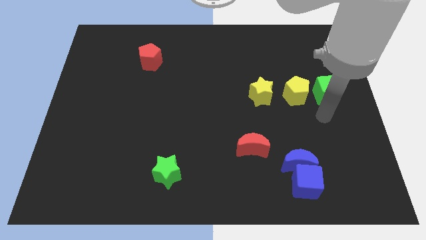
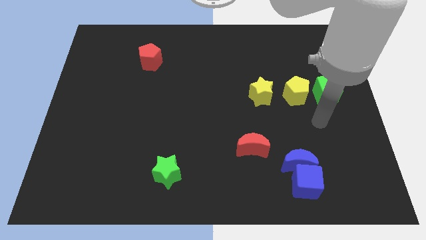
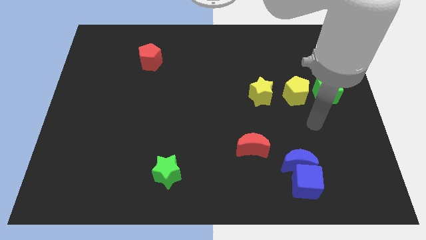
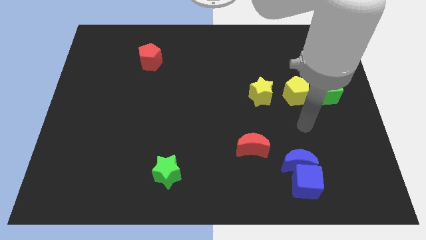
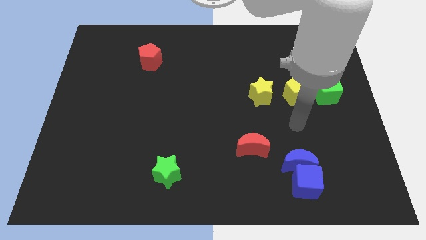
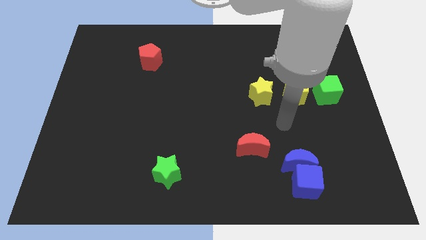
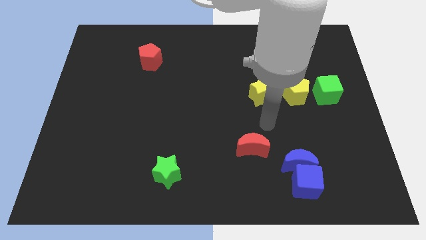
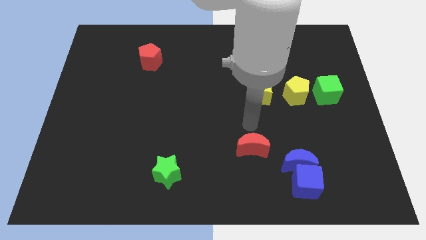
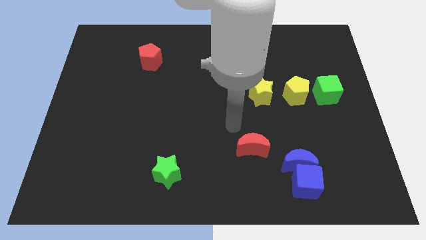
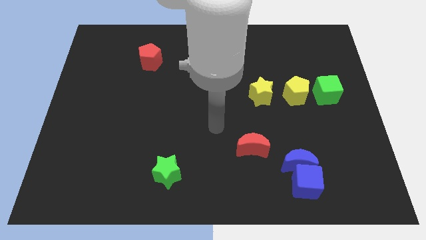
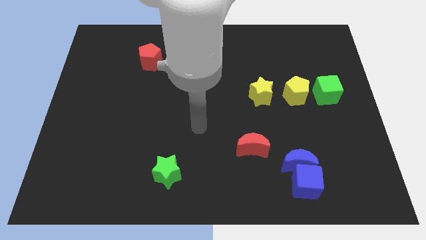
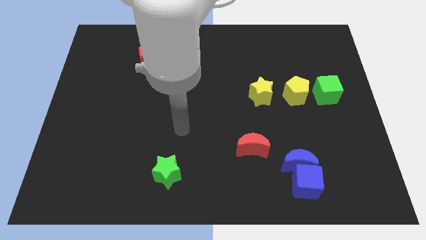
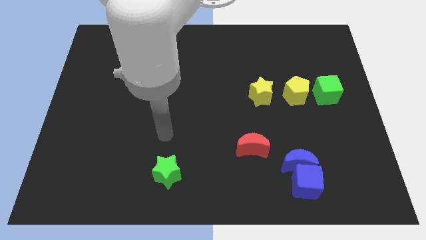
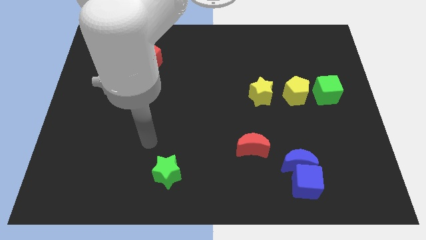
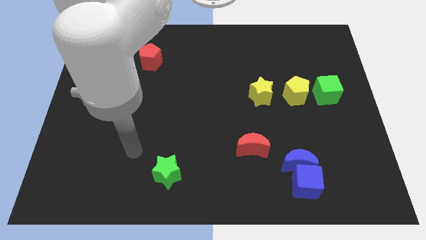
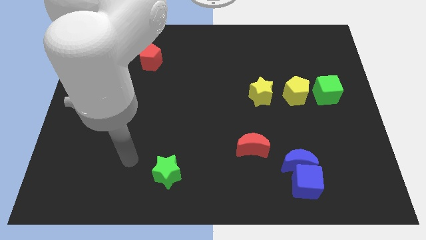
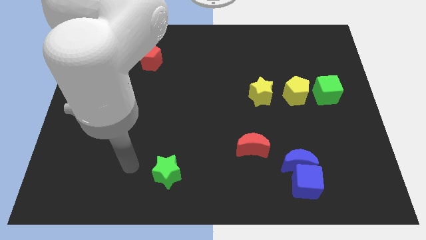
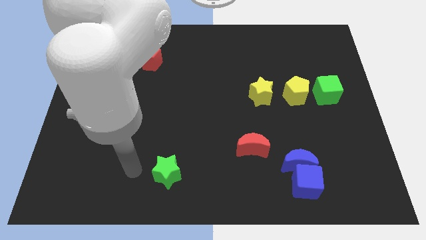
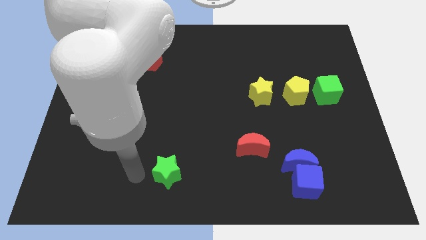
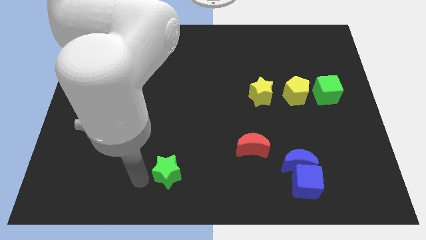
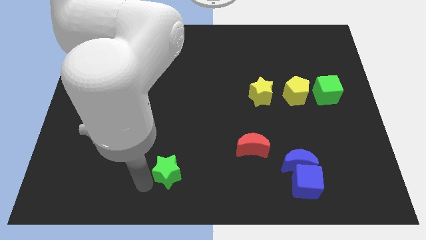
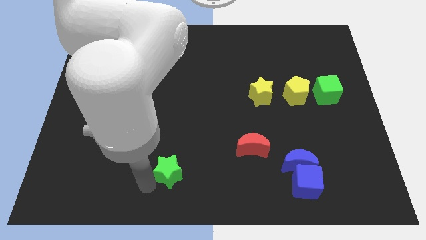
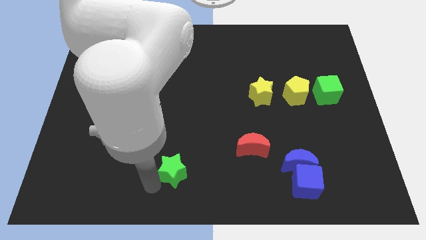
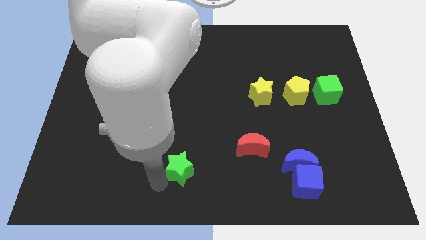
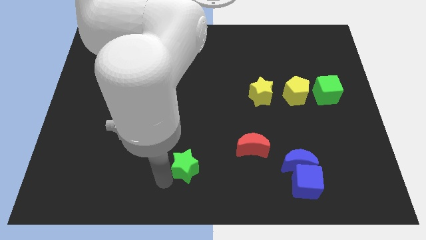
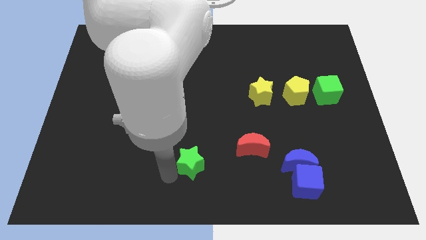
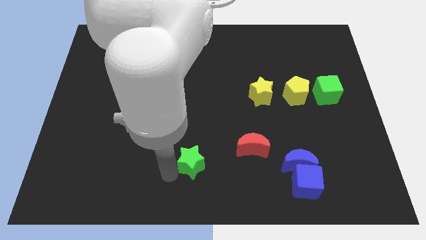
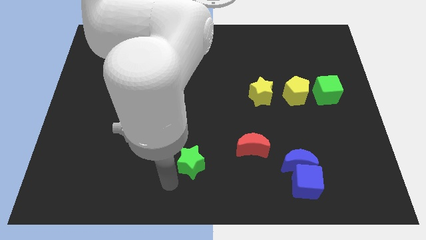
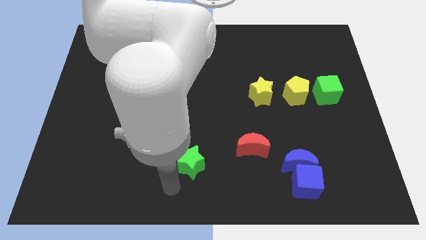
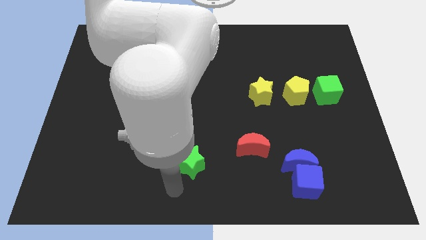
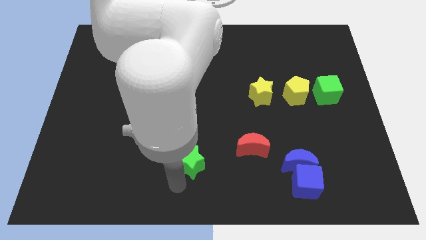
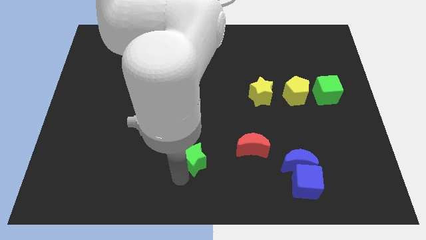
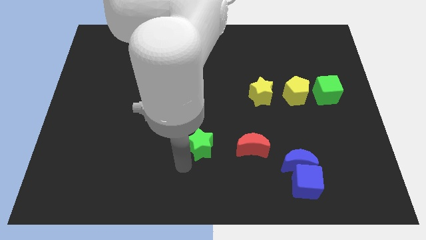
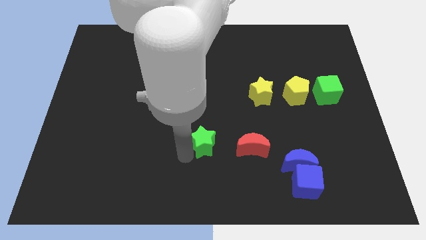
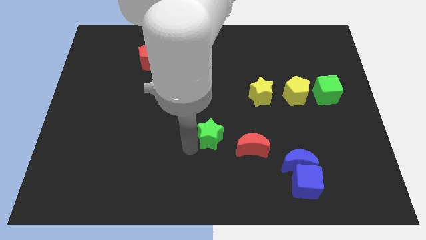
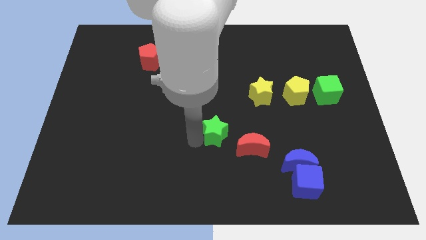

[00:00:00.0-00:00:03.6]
place the green star to the left side of red moon

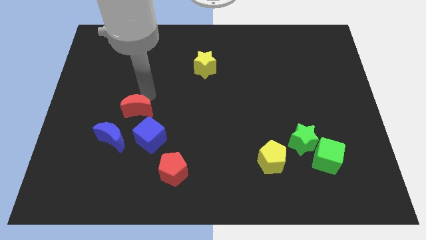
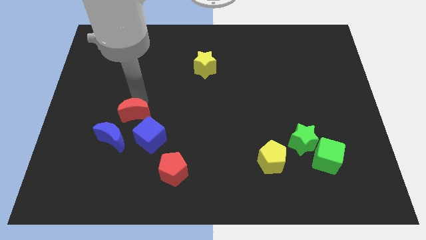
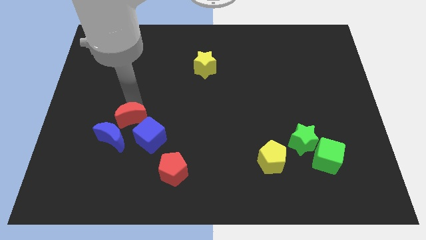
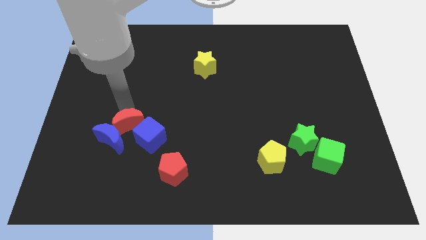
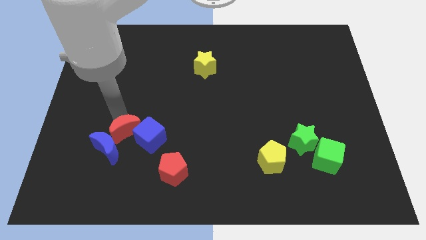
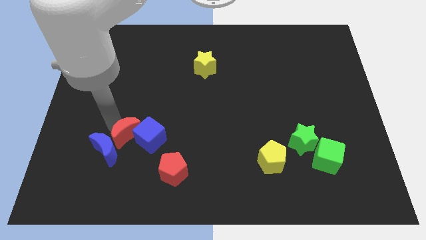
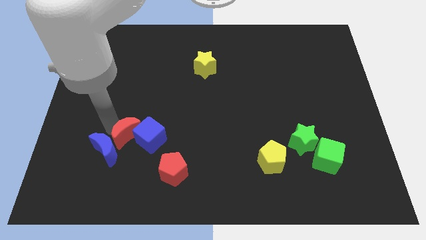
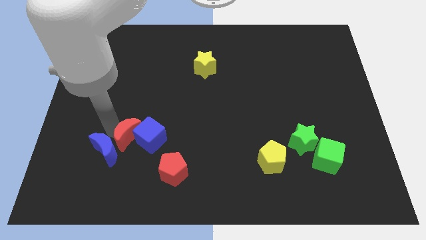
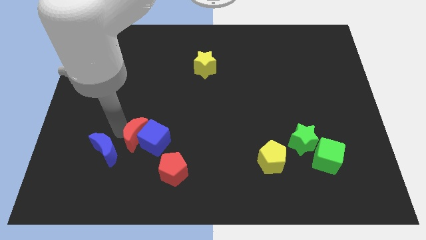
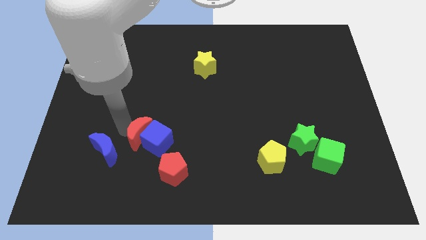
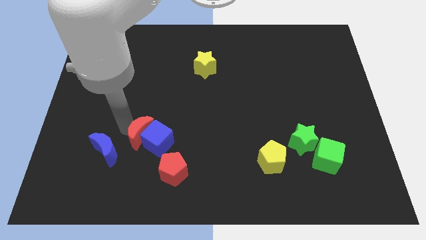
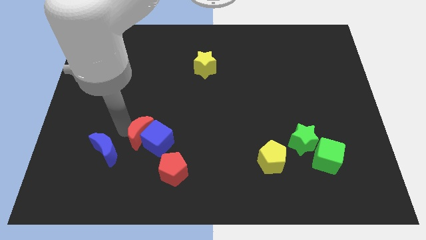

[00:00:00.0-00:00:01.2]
drag the blue cube and red moon to the top left side of the red pentagon

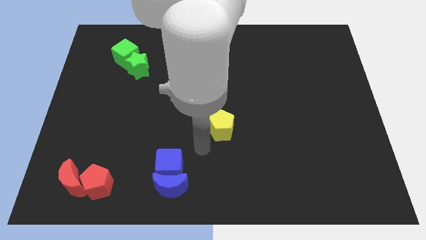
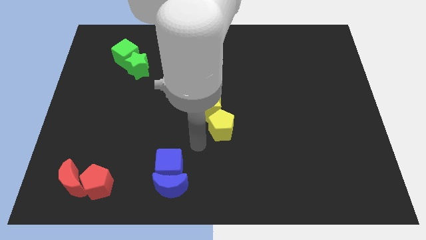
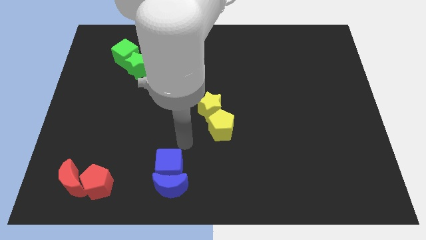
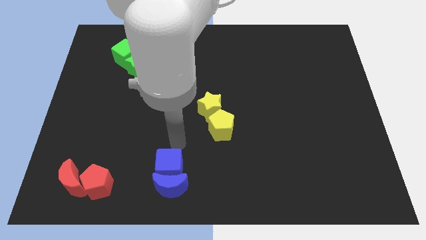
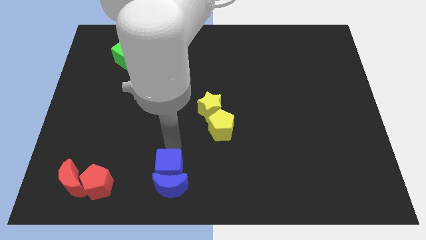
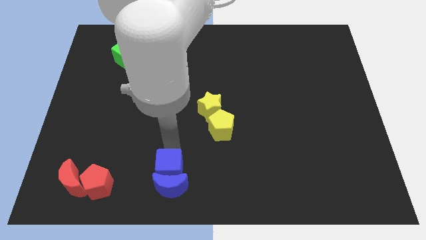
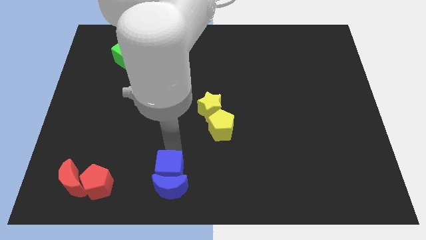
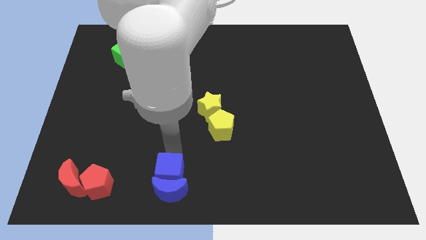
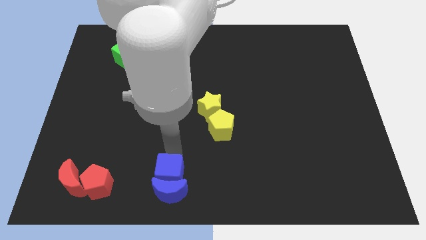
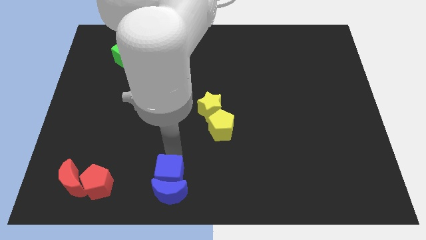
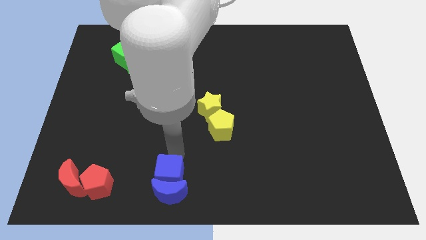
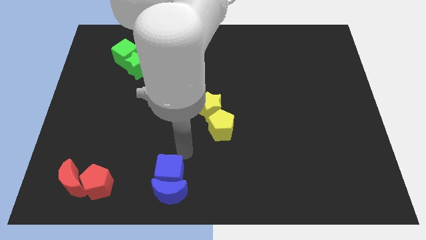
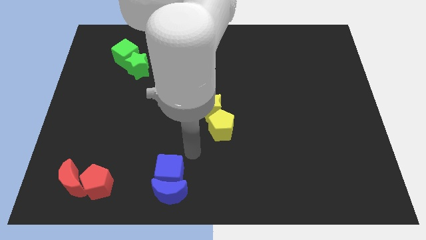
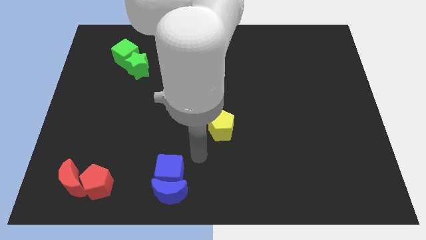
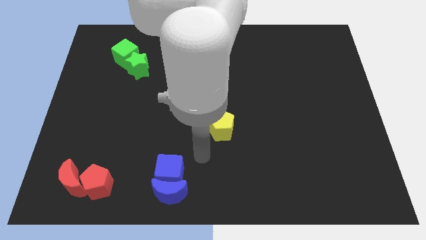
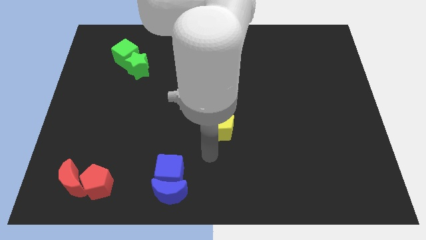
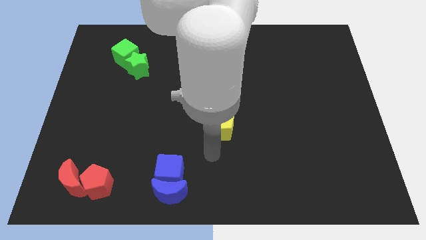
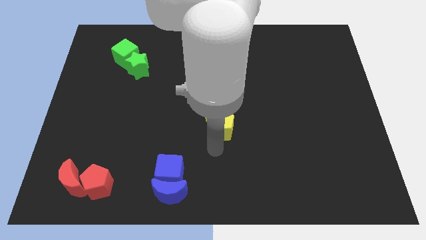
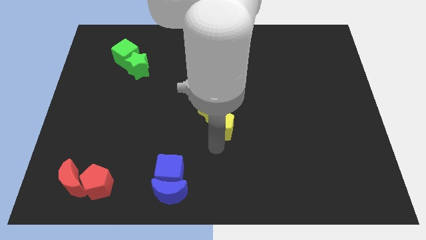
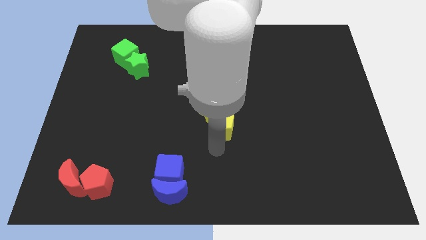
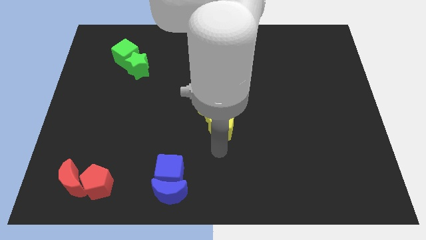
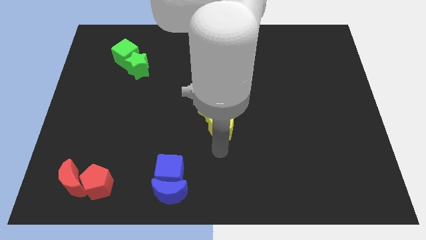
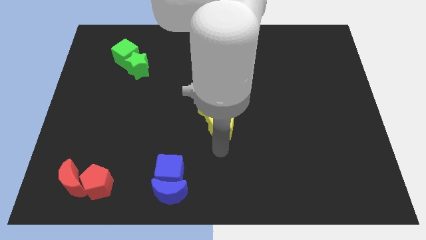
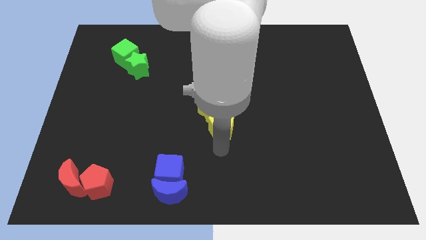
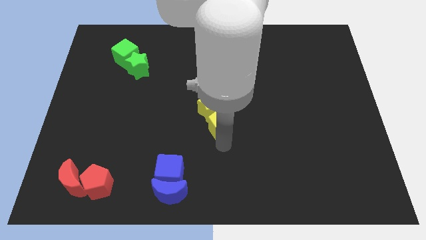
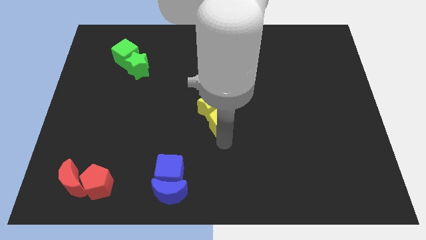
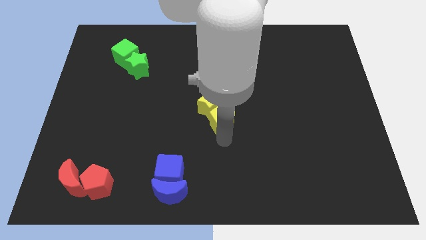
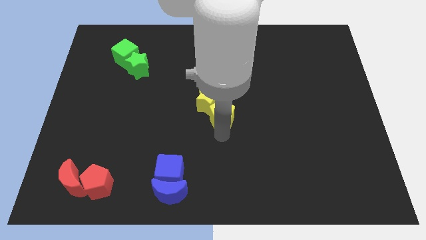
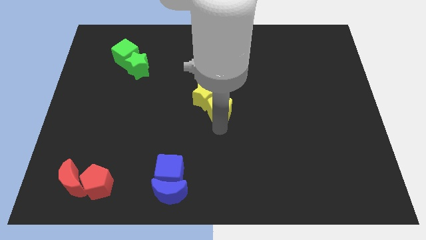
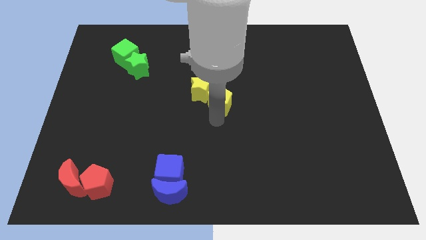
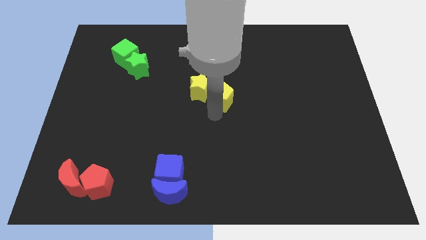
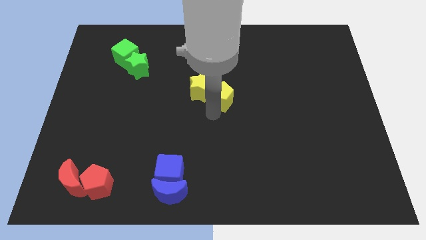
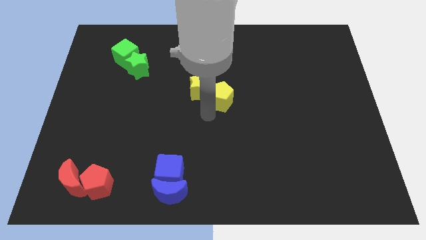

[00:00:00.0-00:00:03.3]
push yellow blocks to the centre of the board

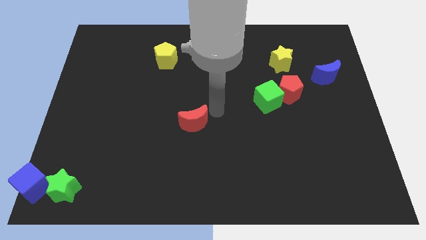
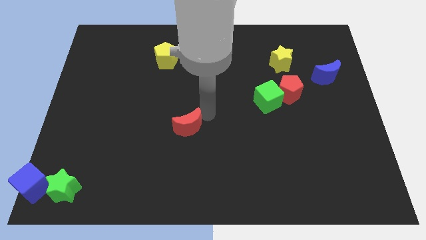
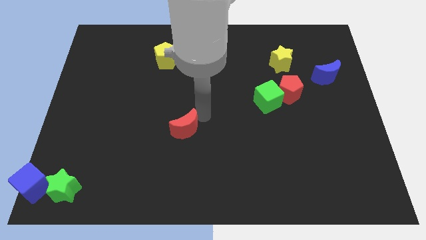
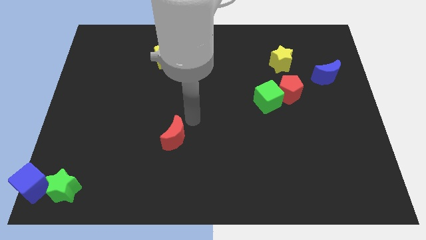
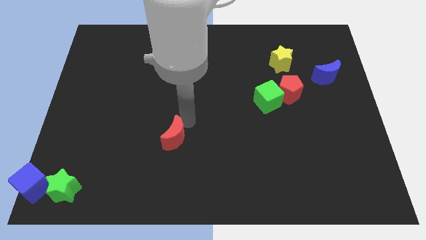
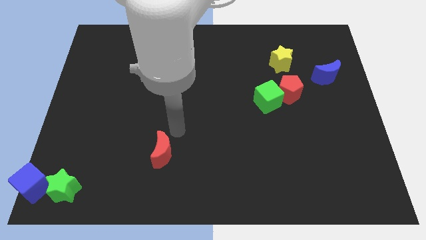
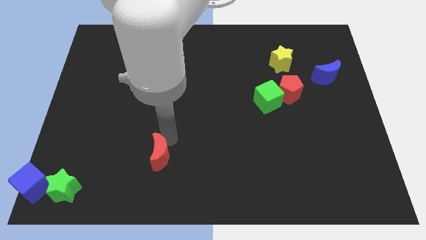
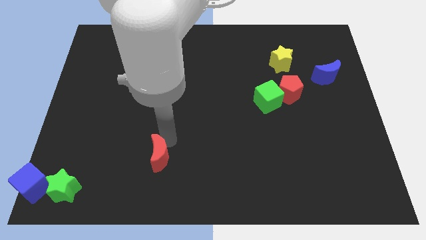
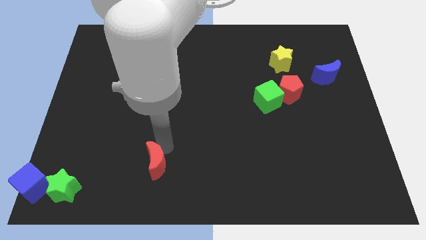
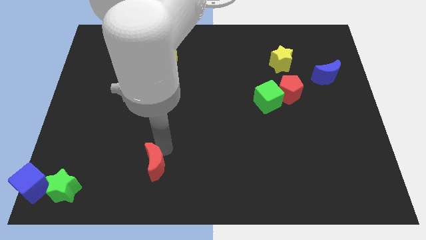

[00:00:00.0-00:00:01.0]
push red crescent downwards

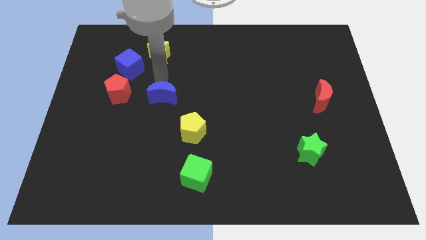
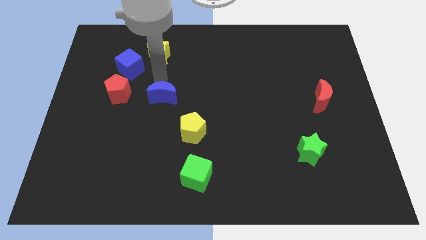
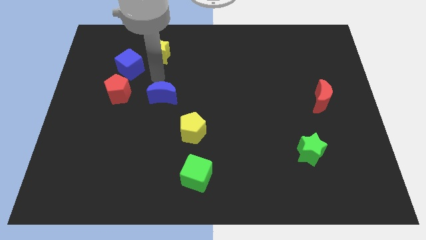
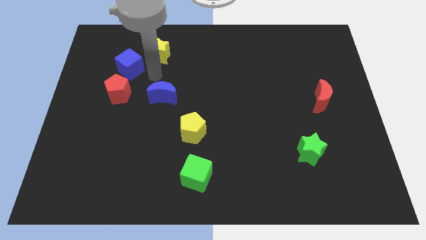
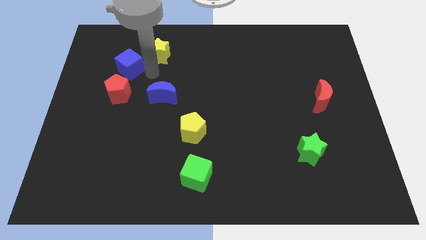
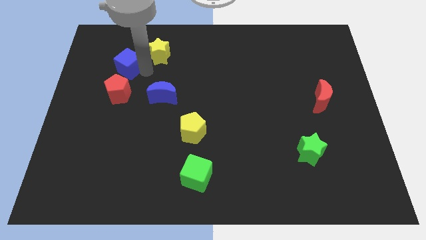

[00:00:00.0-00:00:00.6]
tap blue cube on its right
